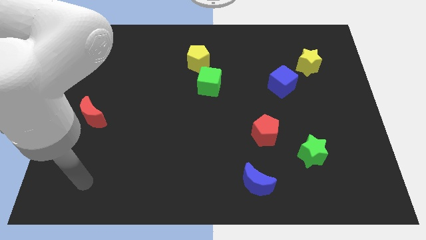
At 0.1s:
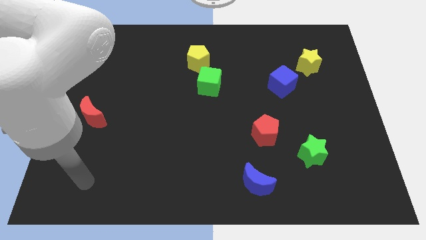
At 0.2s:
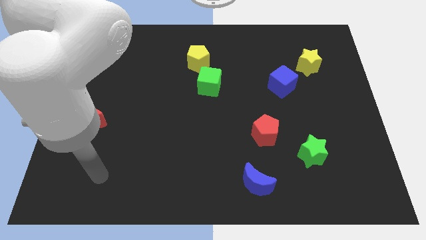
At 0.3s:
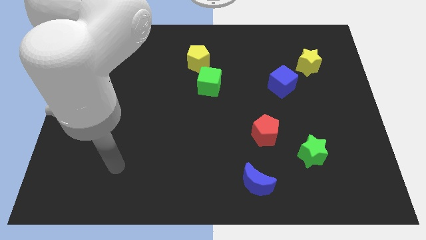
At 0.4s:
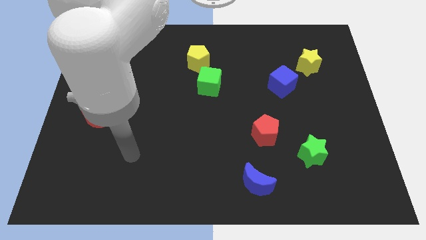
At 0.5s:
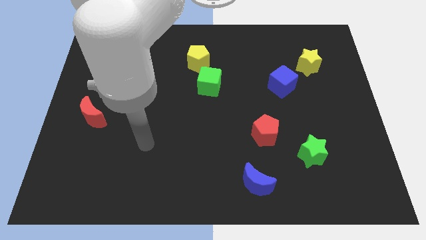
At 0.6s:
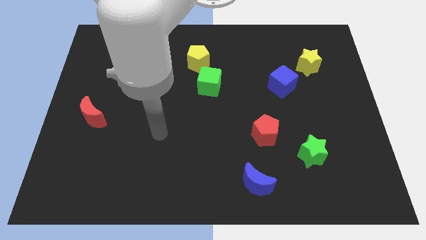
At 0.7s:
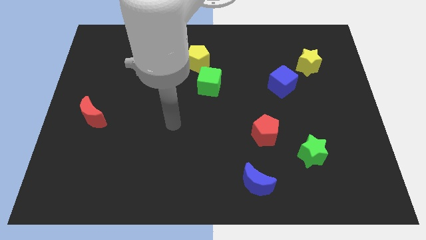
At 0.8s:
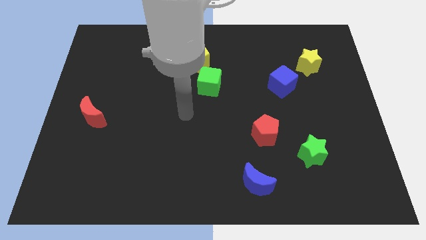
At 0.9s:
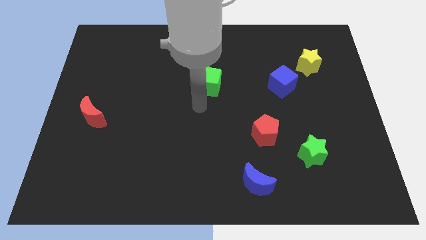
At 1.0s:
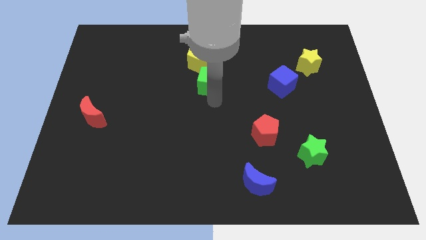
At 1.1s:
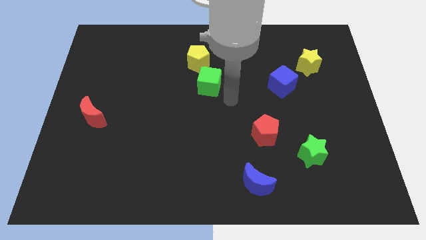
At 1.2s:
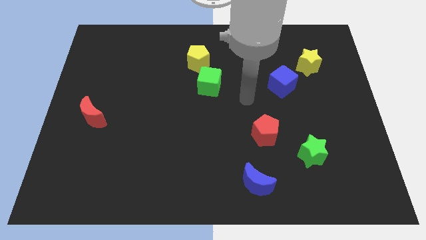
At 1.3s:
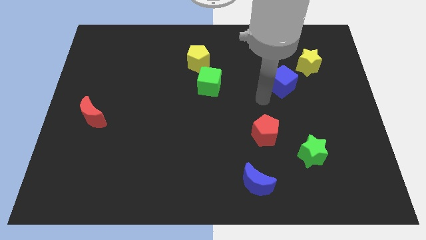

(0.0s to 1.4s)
move your arm to the bottom side of the green cube

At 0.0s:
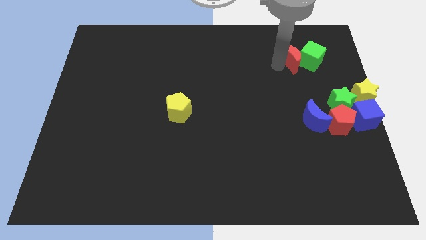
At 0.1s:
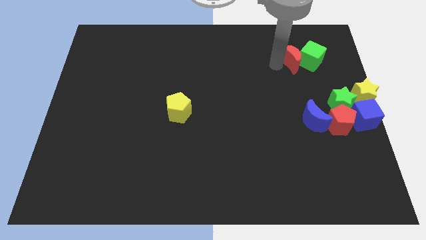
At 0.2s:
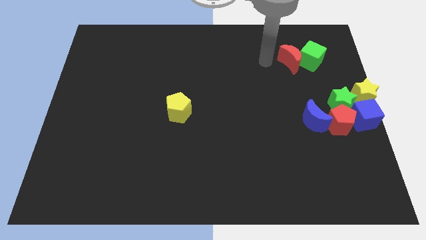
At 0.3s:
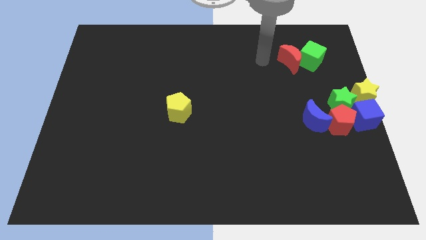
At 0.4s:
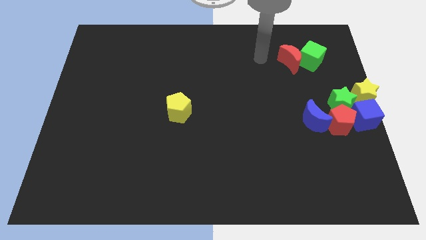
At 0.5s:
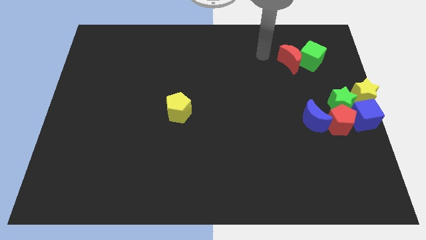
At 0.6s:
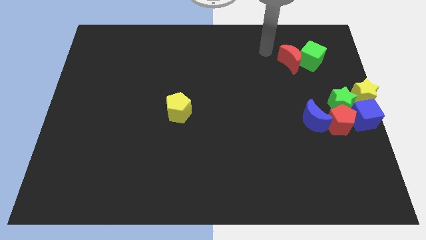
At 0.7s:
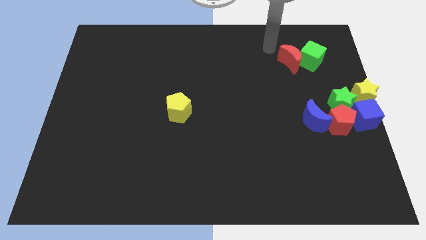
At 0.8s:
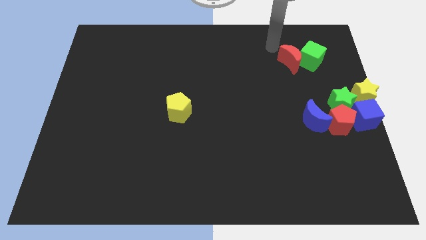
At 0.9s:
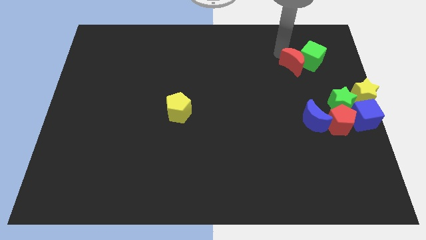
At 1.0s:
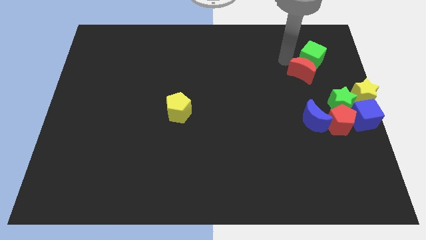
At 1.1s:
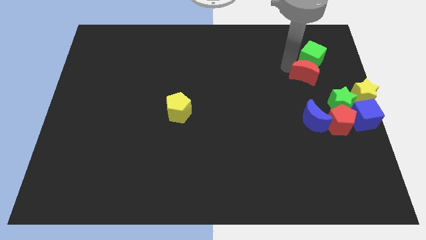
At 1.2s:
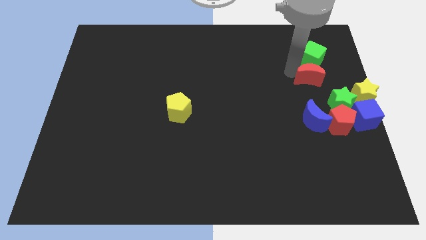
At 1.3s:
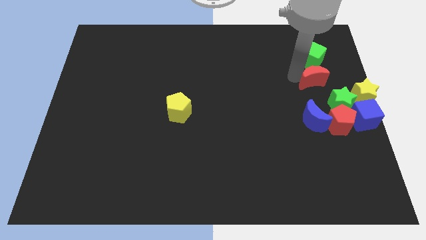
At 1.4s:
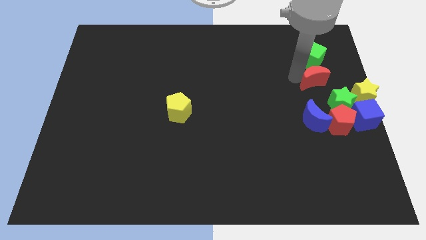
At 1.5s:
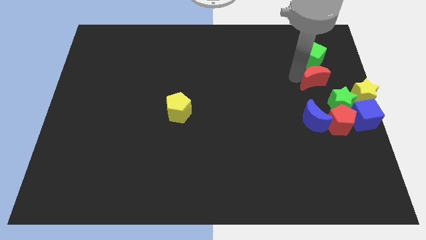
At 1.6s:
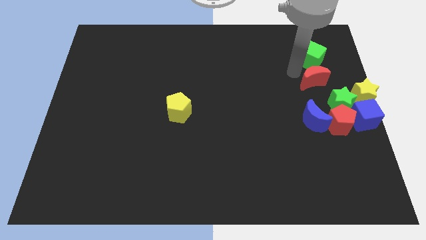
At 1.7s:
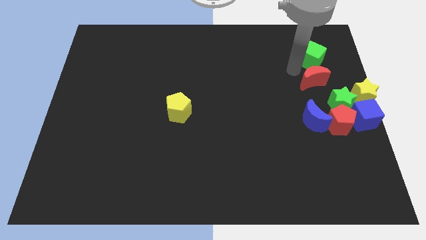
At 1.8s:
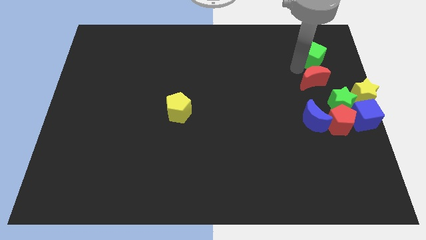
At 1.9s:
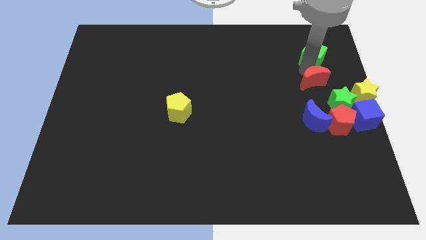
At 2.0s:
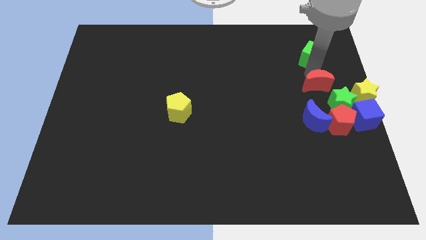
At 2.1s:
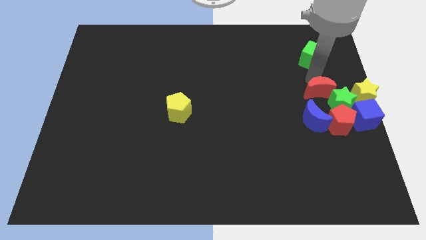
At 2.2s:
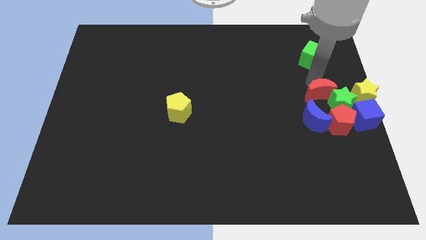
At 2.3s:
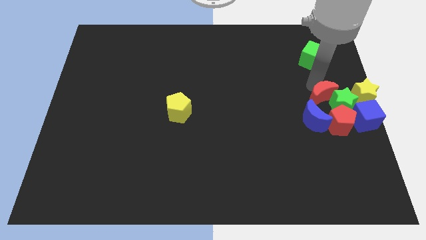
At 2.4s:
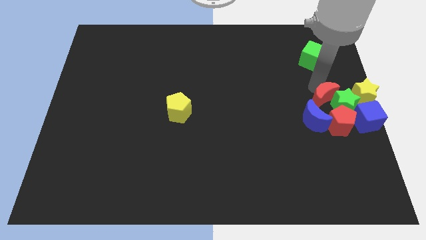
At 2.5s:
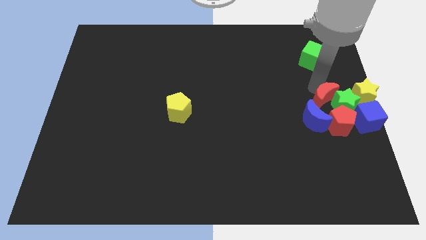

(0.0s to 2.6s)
move the red crescent towards the group of objects at centre right of the board

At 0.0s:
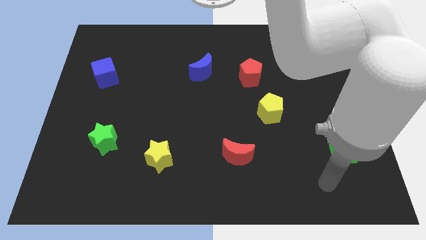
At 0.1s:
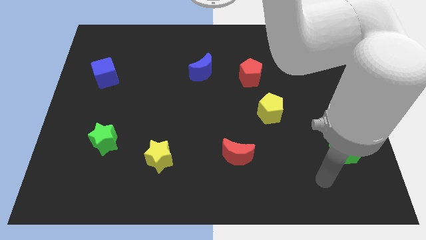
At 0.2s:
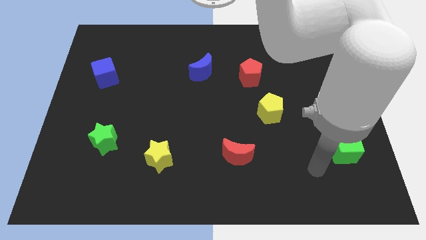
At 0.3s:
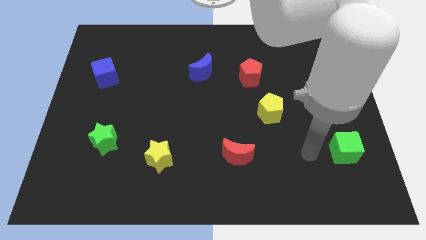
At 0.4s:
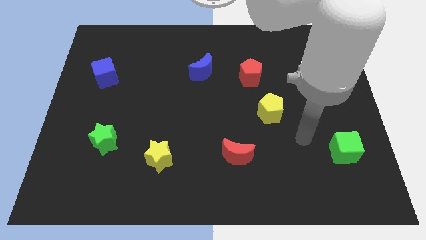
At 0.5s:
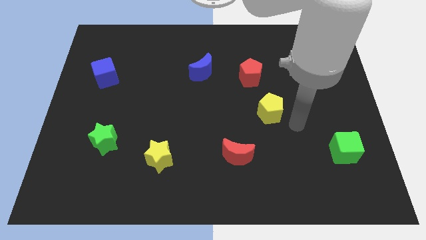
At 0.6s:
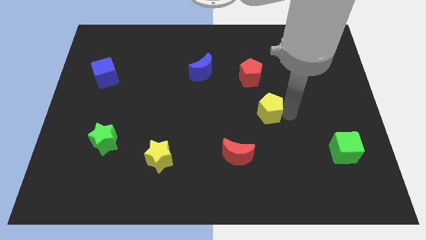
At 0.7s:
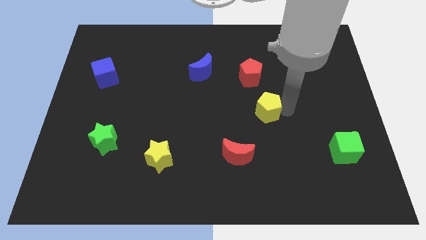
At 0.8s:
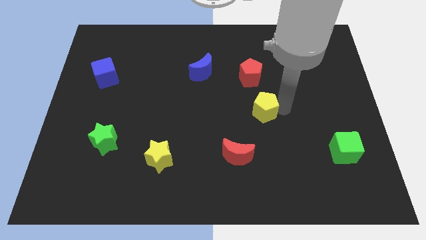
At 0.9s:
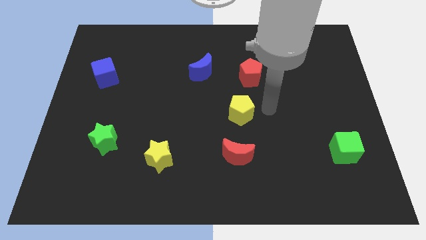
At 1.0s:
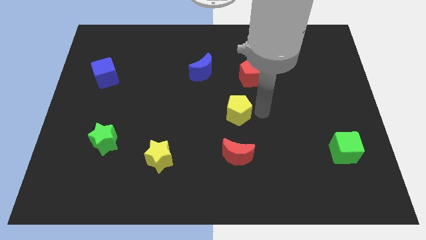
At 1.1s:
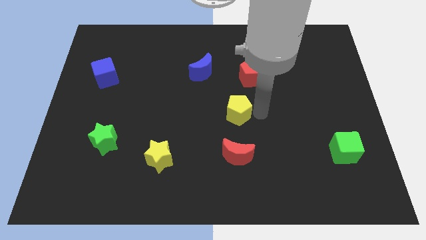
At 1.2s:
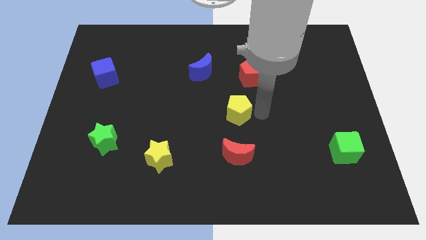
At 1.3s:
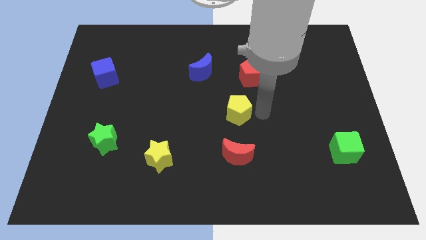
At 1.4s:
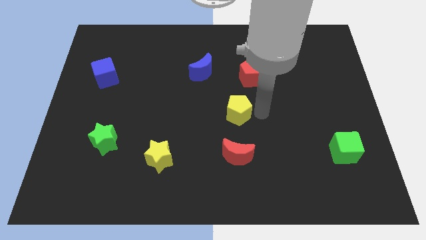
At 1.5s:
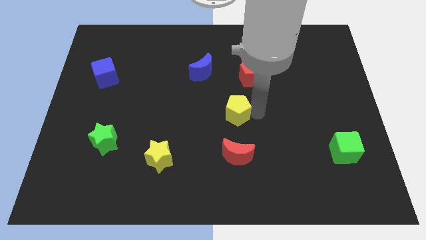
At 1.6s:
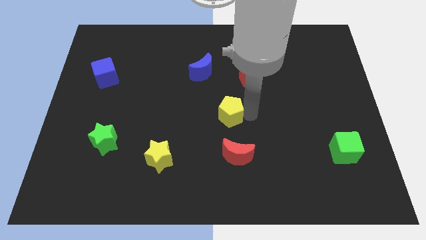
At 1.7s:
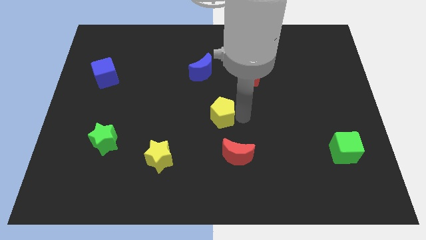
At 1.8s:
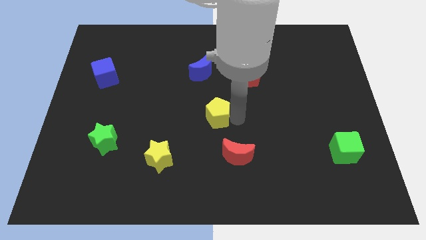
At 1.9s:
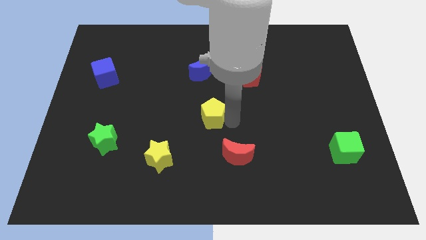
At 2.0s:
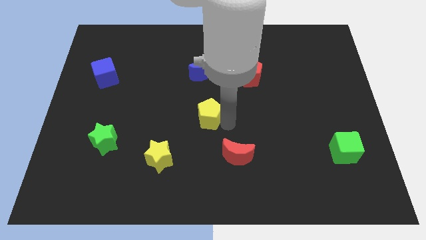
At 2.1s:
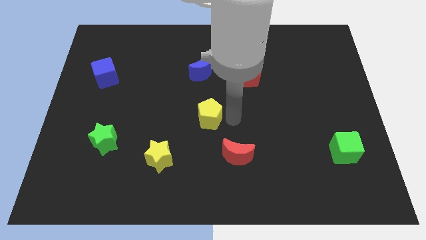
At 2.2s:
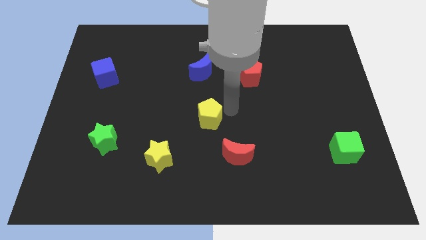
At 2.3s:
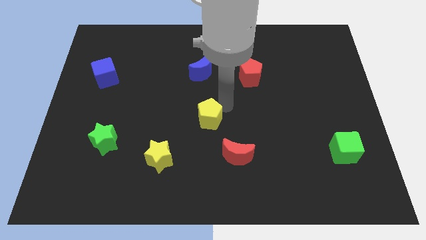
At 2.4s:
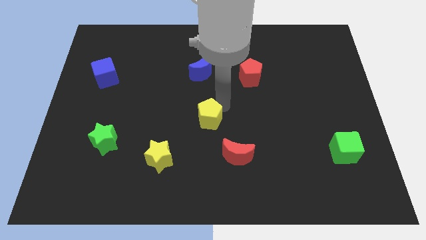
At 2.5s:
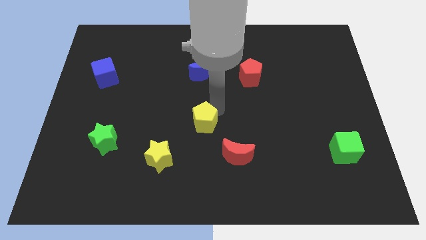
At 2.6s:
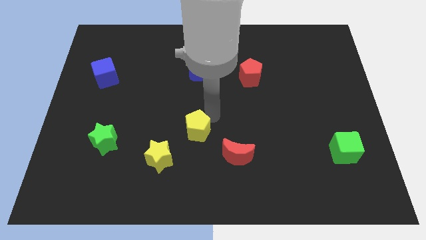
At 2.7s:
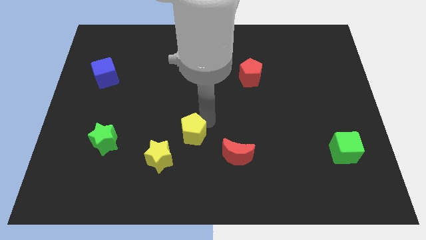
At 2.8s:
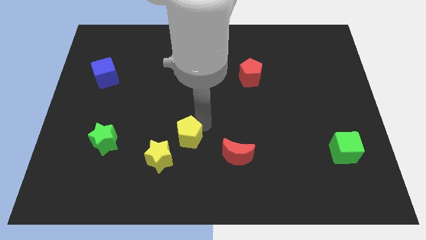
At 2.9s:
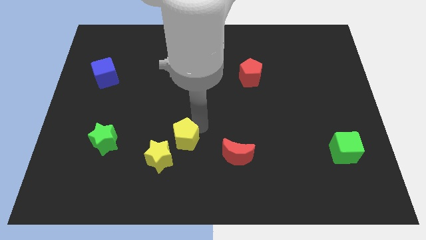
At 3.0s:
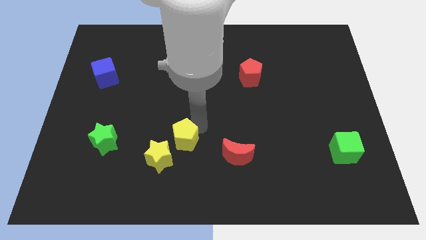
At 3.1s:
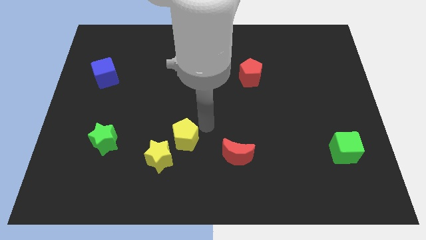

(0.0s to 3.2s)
move the yellow pentagon towards the top right of the yellow star

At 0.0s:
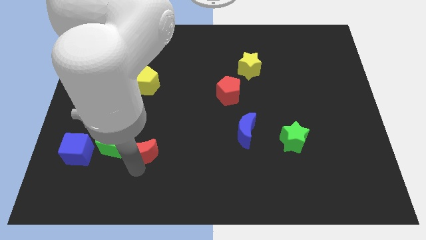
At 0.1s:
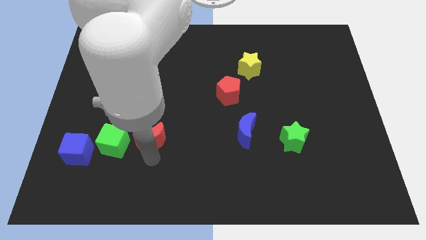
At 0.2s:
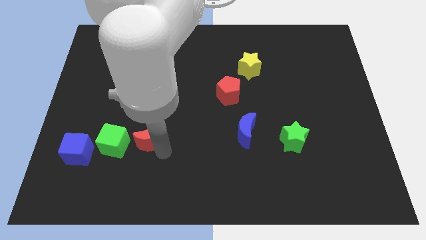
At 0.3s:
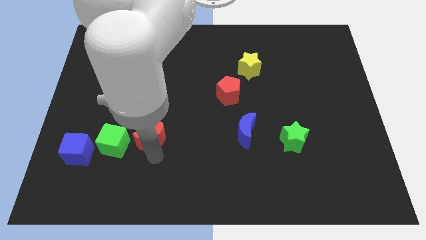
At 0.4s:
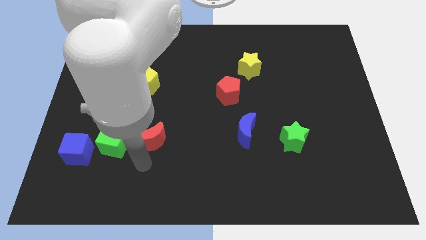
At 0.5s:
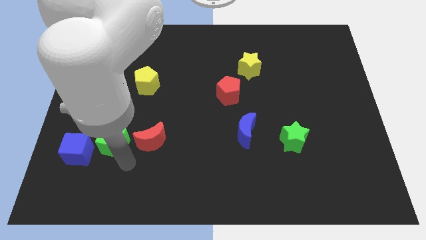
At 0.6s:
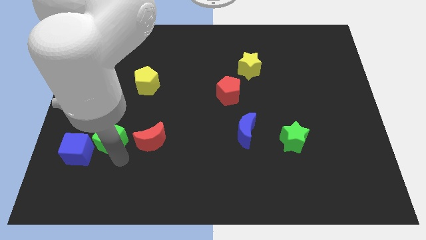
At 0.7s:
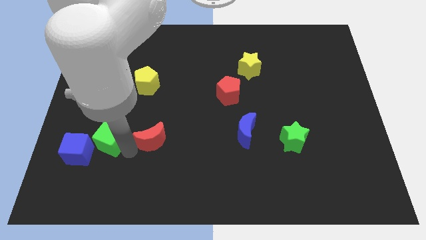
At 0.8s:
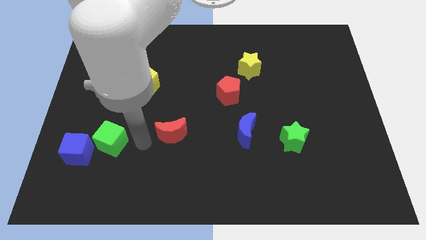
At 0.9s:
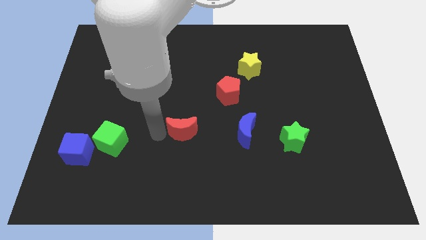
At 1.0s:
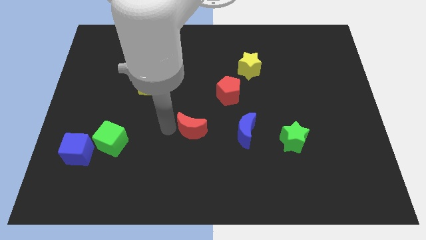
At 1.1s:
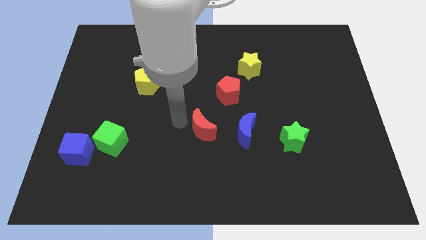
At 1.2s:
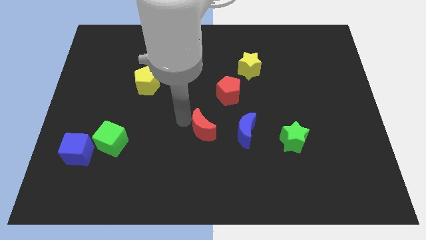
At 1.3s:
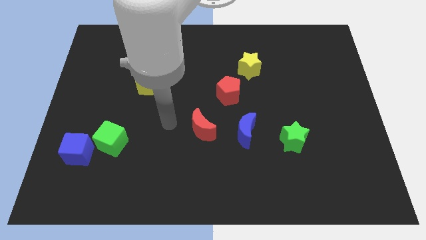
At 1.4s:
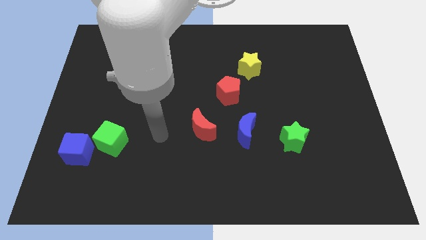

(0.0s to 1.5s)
slide the red moon diagonally bottom right to the yellow pentagon

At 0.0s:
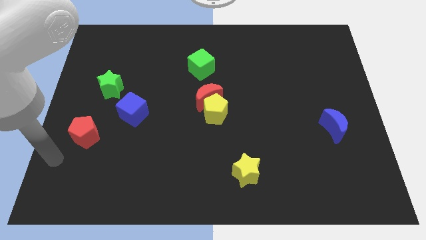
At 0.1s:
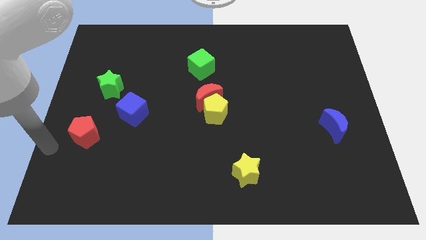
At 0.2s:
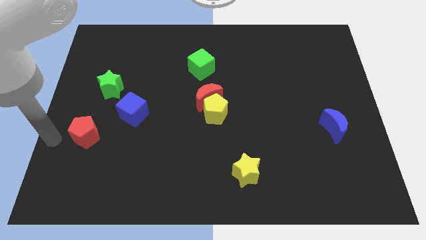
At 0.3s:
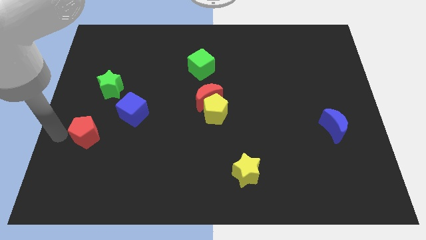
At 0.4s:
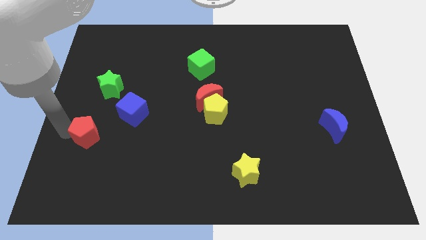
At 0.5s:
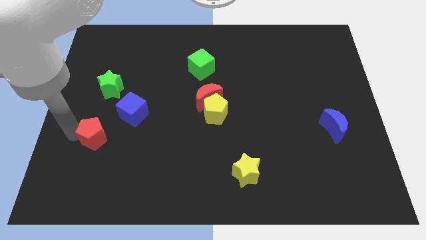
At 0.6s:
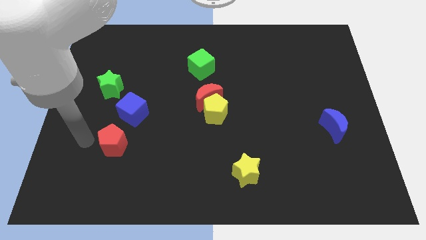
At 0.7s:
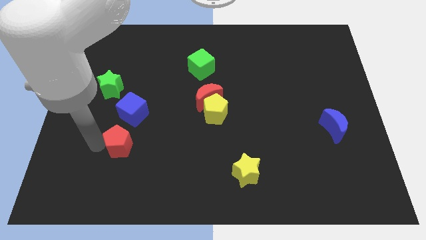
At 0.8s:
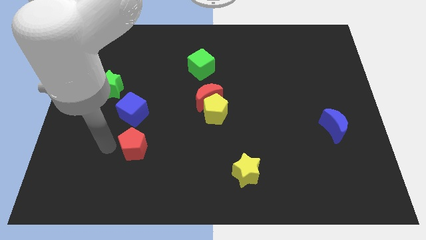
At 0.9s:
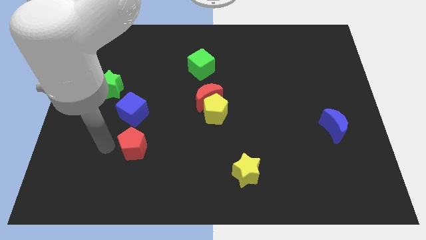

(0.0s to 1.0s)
place the red pentagon below the blue cube
